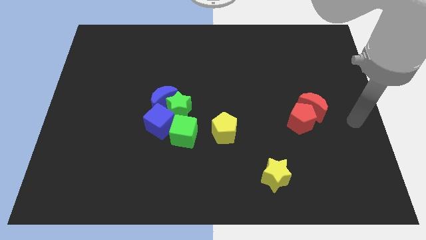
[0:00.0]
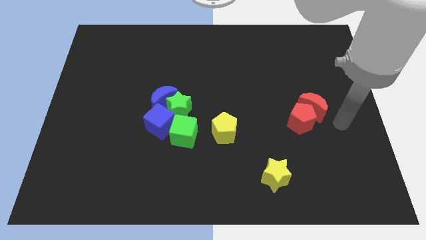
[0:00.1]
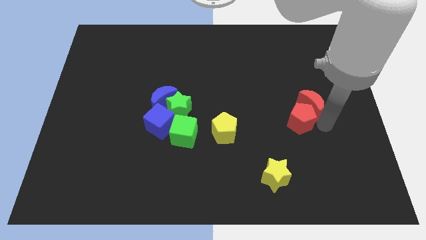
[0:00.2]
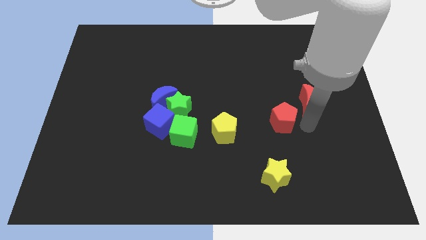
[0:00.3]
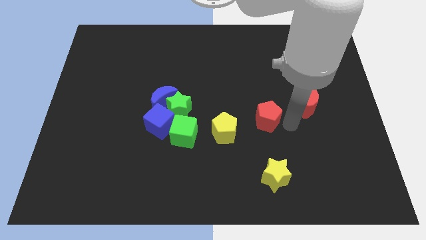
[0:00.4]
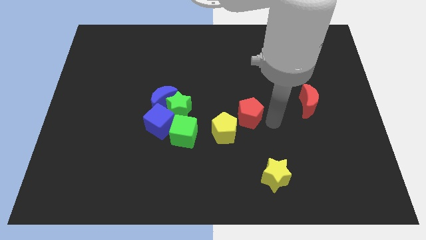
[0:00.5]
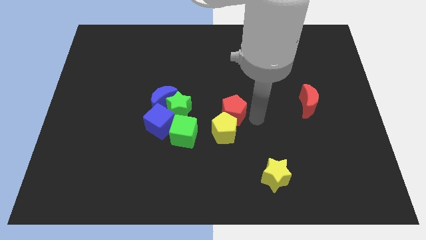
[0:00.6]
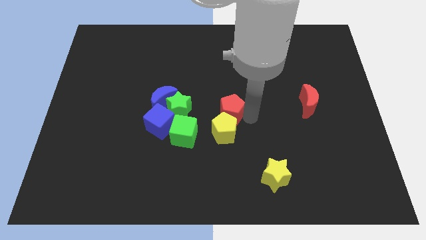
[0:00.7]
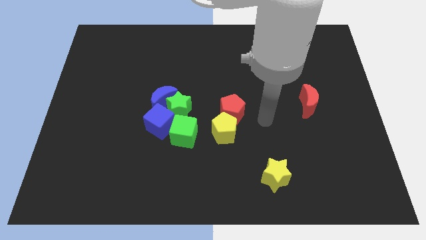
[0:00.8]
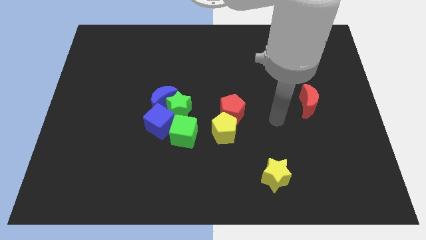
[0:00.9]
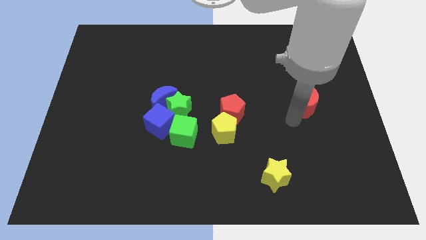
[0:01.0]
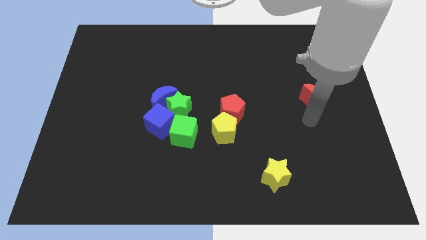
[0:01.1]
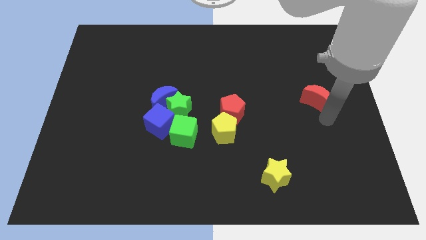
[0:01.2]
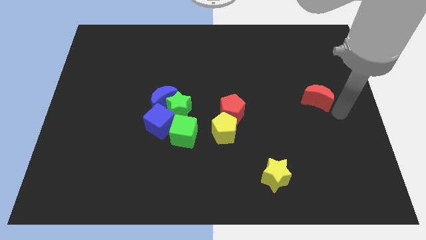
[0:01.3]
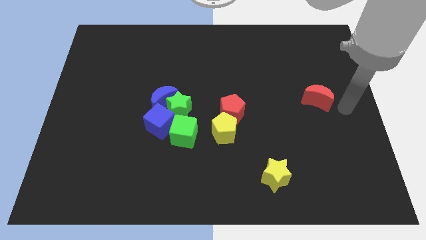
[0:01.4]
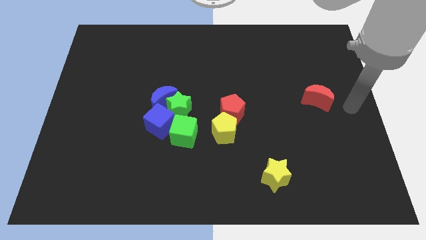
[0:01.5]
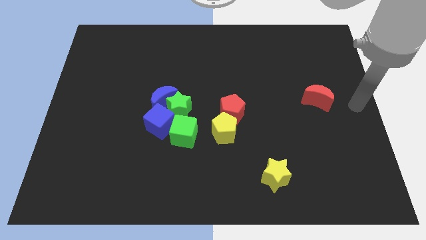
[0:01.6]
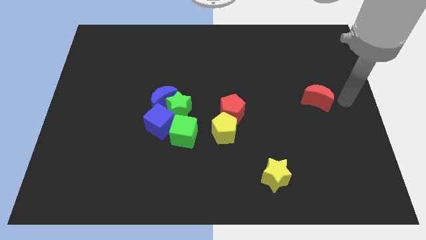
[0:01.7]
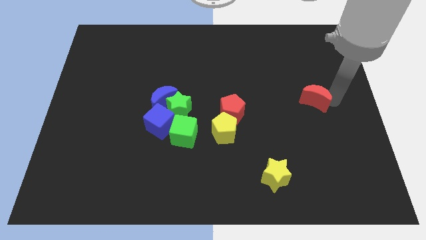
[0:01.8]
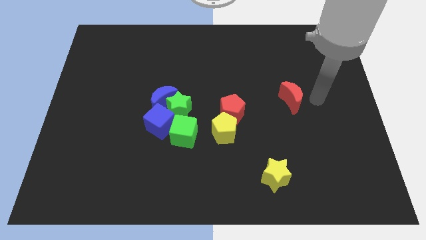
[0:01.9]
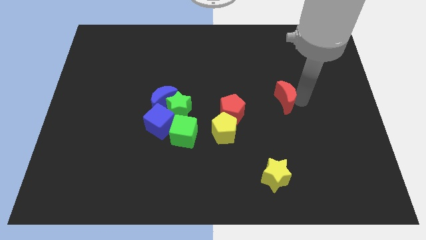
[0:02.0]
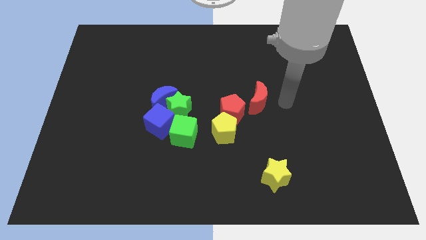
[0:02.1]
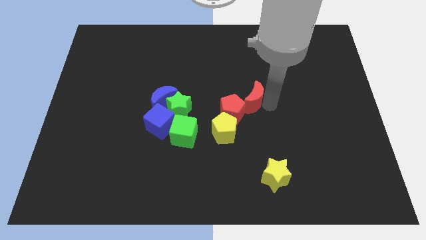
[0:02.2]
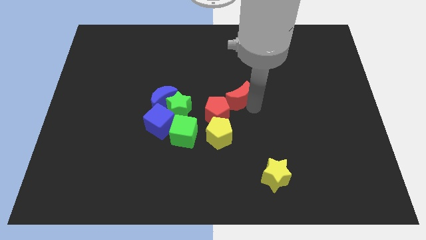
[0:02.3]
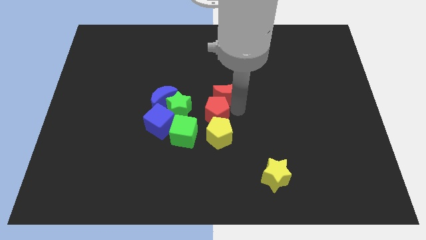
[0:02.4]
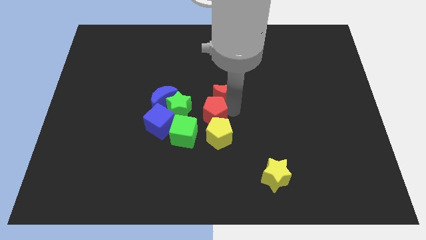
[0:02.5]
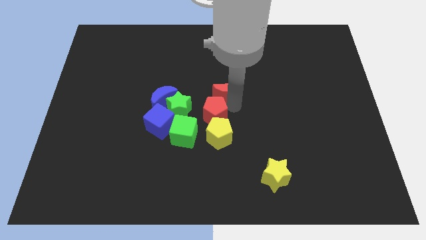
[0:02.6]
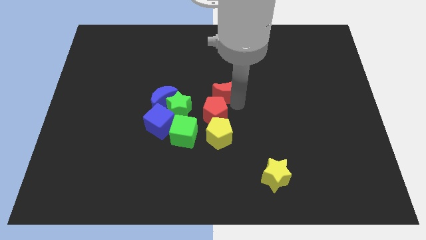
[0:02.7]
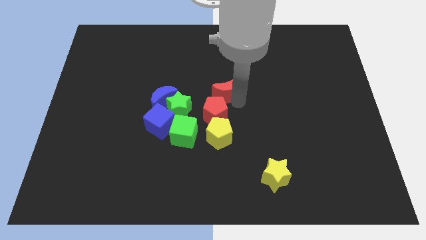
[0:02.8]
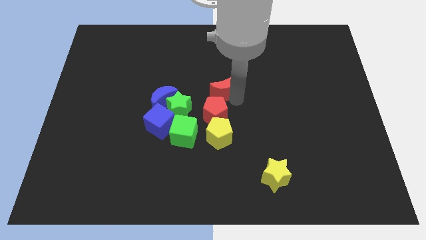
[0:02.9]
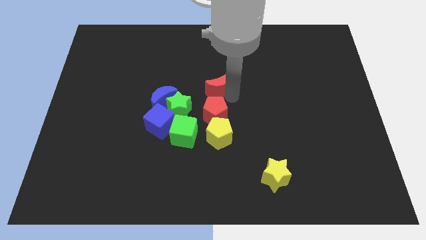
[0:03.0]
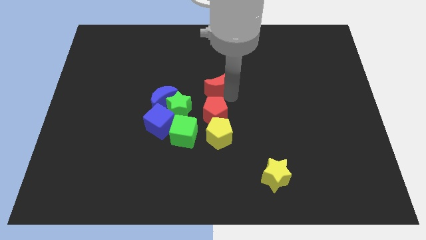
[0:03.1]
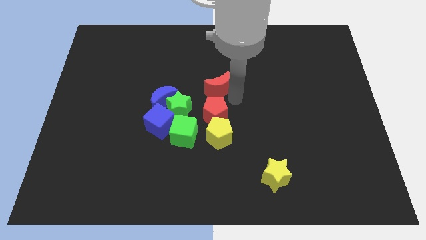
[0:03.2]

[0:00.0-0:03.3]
arrange the red moon red pentagon and yellow pentagon in a vertical line

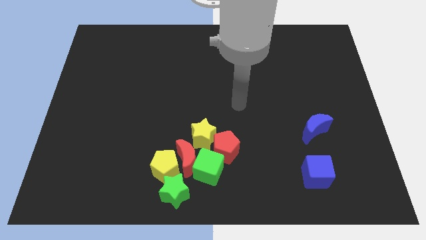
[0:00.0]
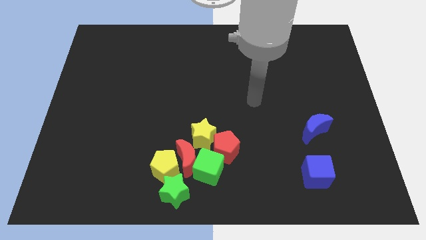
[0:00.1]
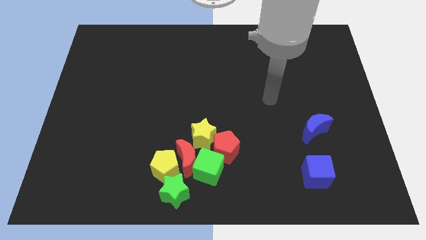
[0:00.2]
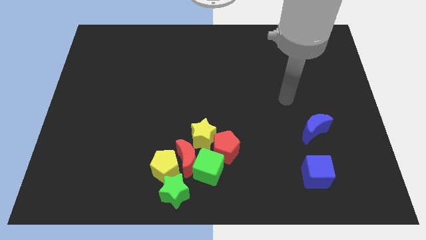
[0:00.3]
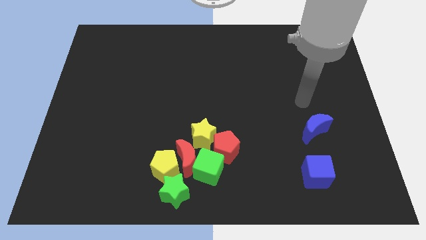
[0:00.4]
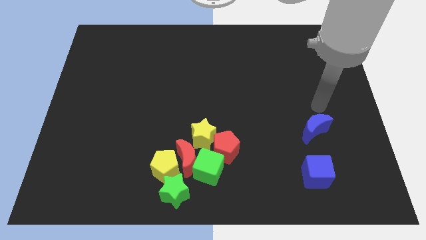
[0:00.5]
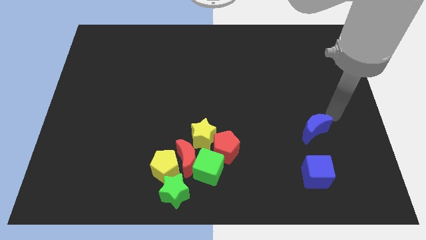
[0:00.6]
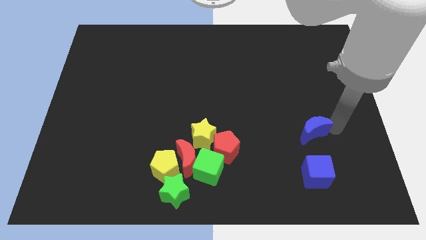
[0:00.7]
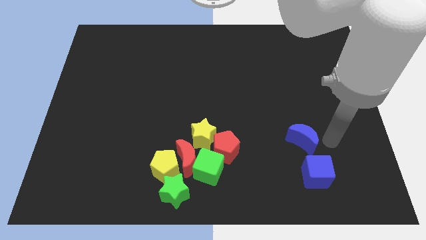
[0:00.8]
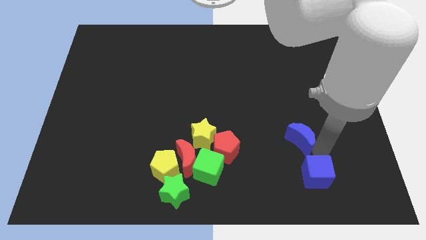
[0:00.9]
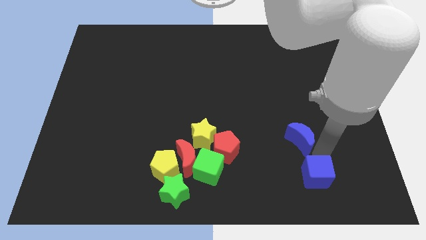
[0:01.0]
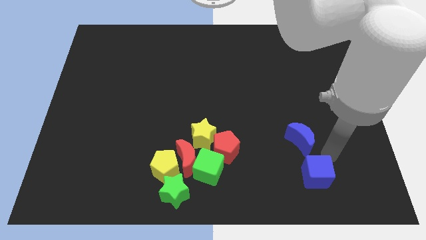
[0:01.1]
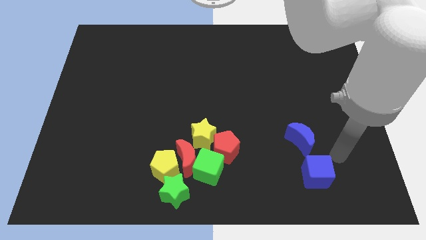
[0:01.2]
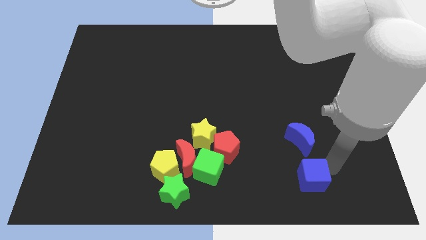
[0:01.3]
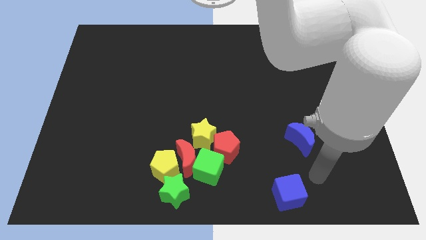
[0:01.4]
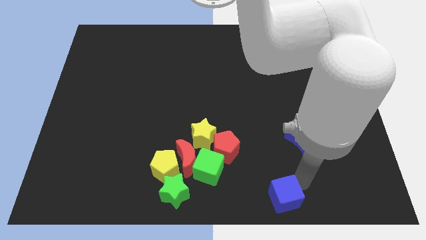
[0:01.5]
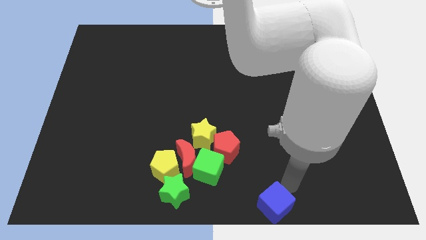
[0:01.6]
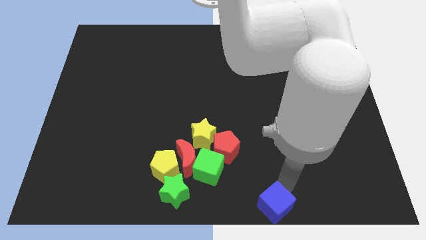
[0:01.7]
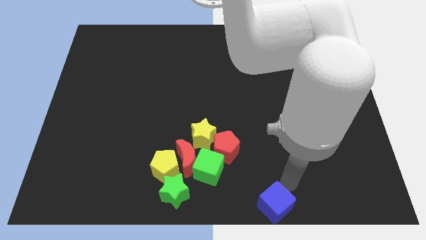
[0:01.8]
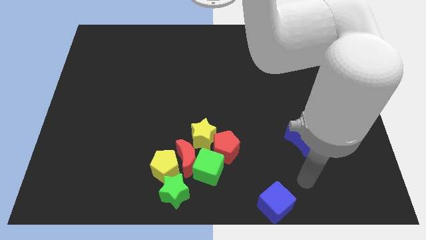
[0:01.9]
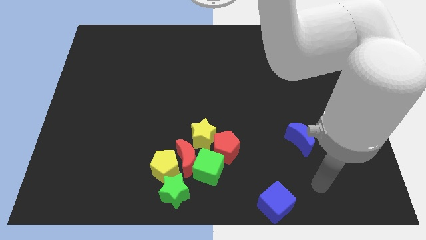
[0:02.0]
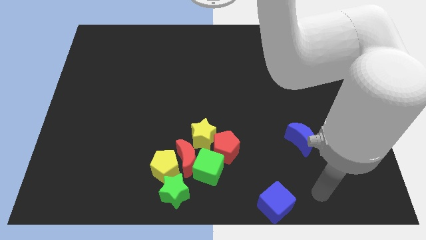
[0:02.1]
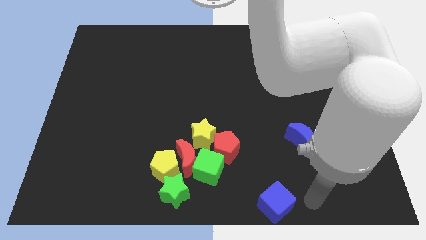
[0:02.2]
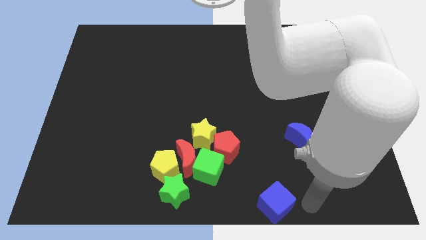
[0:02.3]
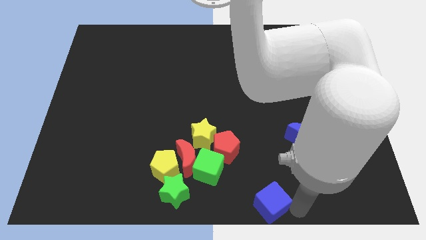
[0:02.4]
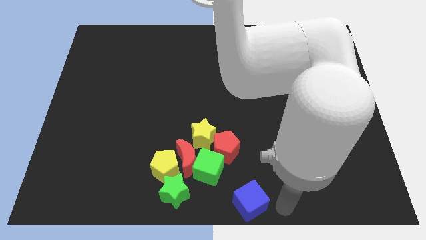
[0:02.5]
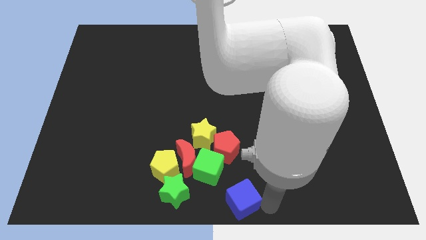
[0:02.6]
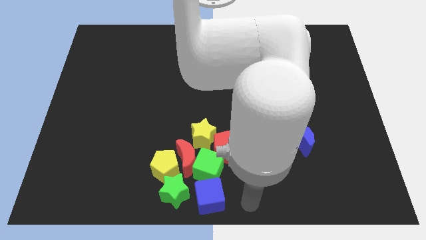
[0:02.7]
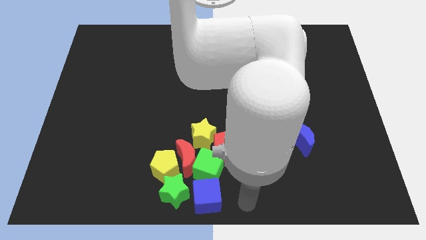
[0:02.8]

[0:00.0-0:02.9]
place the blue cube below green cube

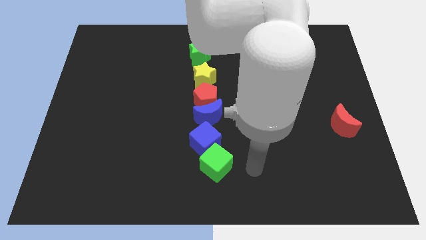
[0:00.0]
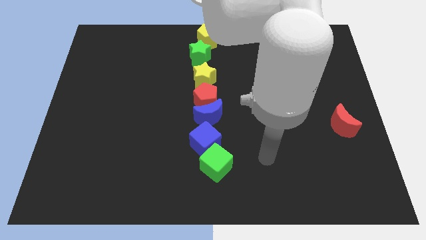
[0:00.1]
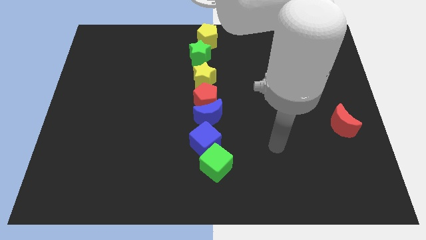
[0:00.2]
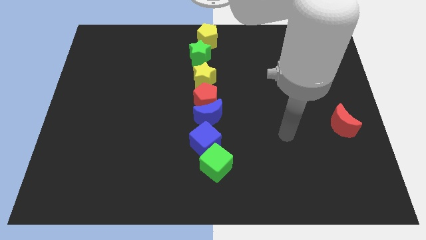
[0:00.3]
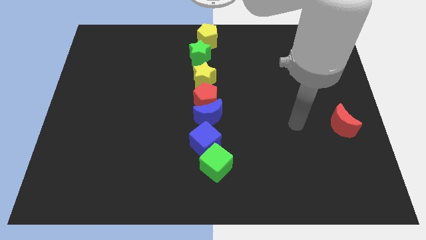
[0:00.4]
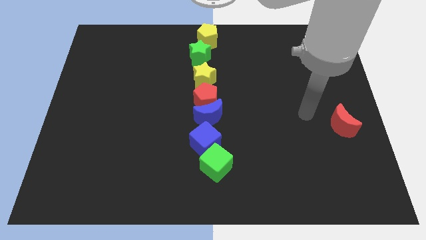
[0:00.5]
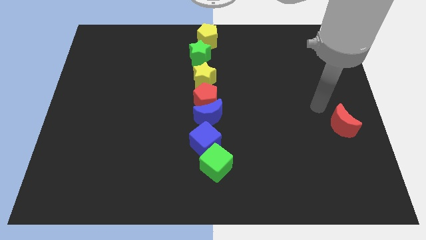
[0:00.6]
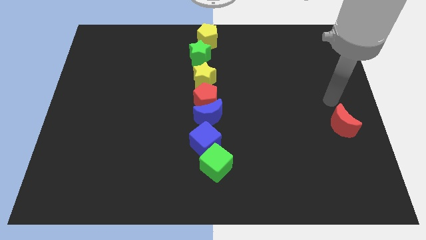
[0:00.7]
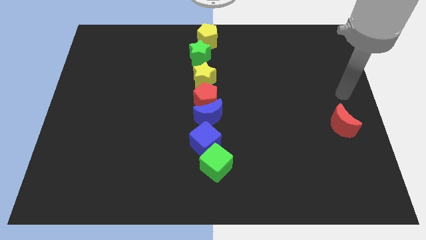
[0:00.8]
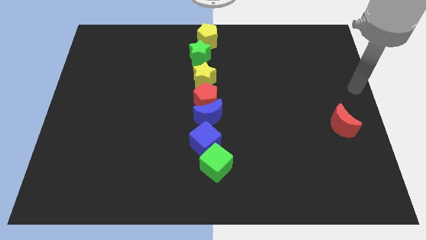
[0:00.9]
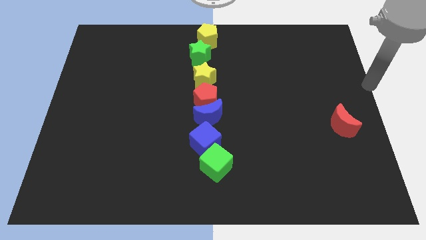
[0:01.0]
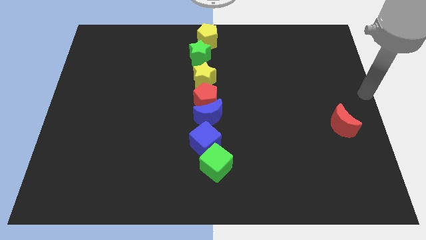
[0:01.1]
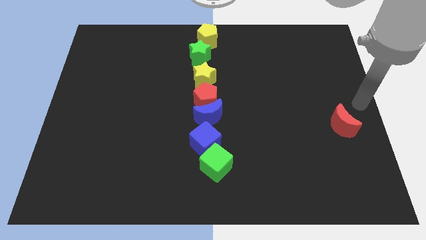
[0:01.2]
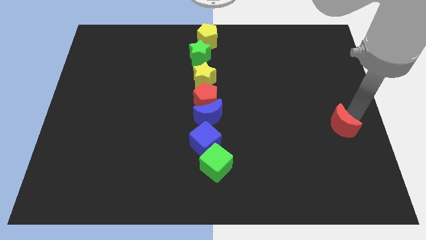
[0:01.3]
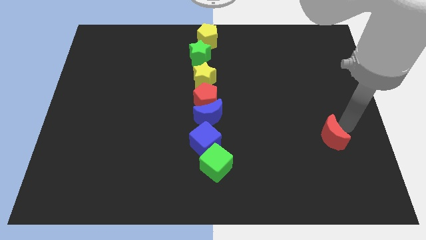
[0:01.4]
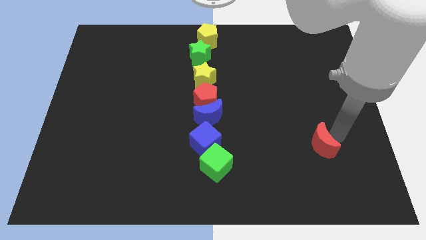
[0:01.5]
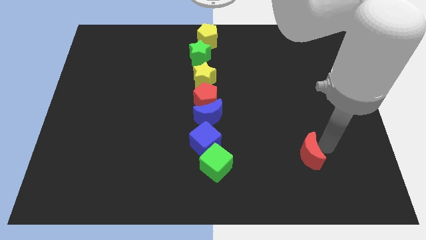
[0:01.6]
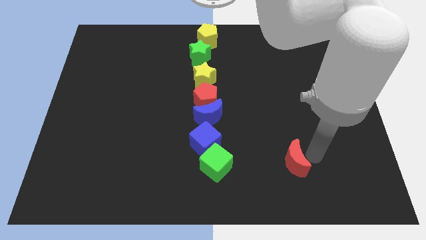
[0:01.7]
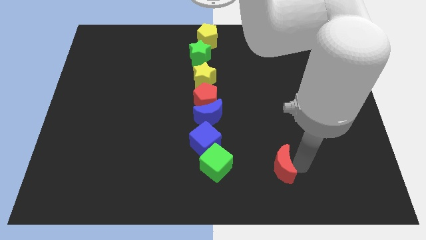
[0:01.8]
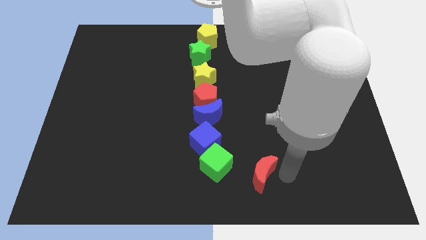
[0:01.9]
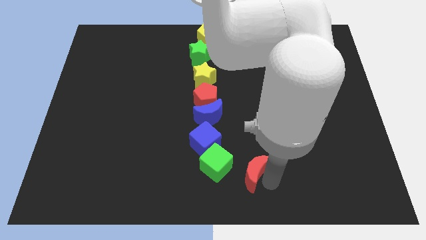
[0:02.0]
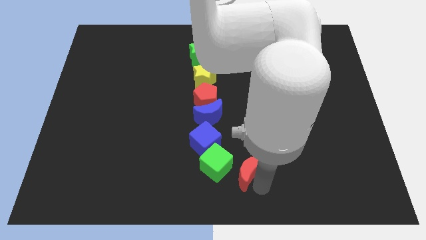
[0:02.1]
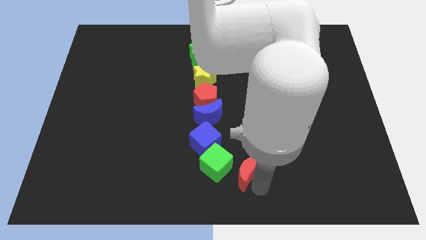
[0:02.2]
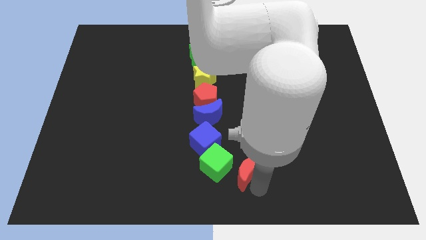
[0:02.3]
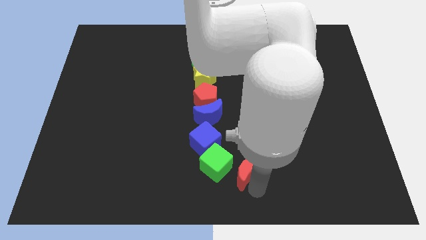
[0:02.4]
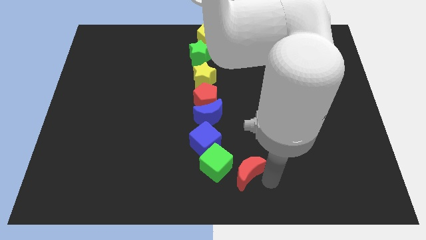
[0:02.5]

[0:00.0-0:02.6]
bring the red moon close to the bottom right side of the green cube

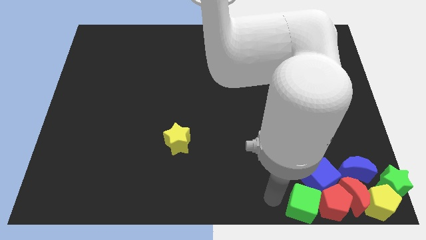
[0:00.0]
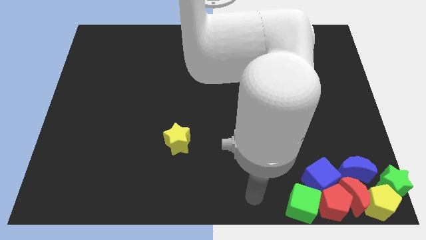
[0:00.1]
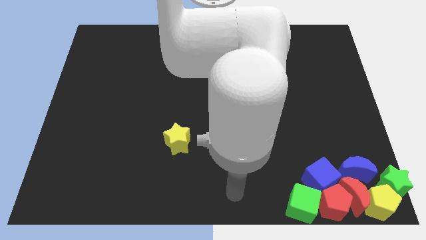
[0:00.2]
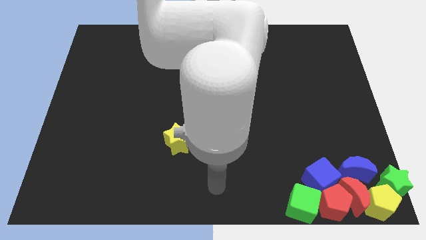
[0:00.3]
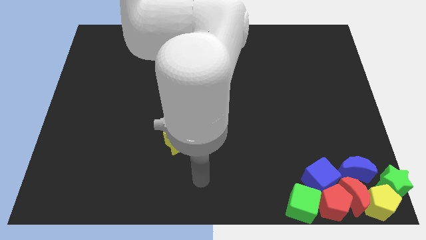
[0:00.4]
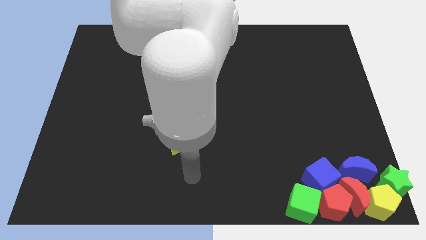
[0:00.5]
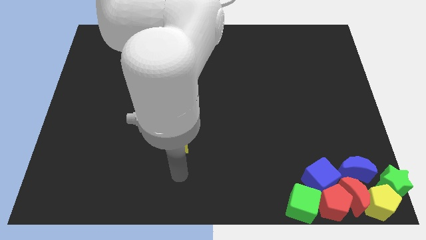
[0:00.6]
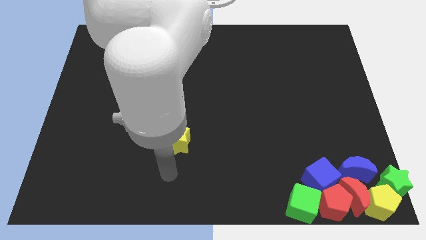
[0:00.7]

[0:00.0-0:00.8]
move your arm at the bottom side of the yellow star
